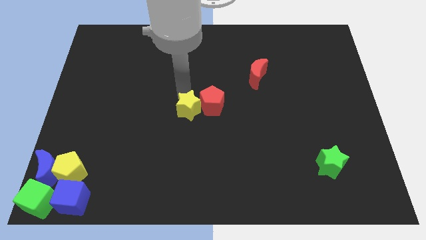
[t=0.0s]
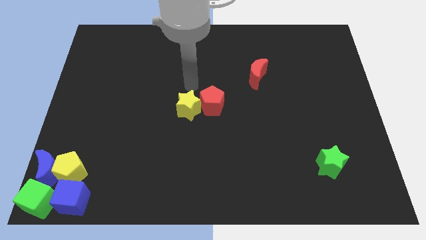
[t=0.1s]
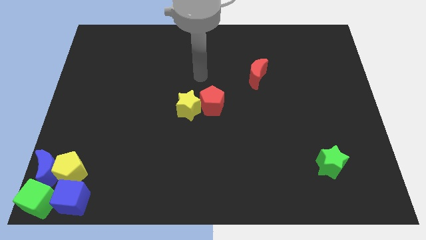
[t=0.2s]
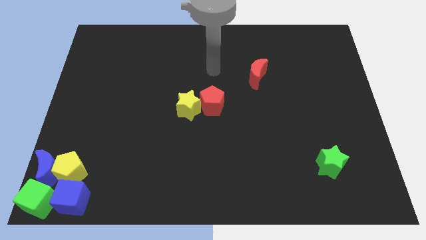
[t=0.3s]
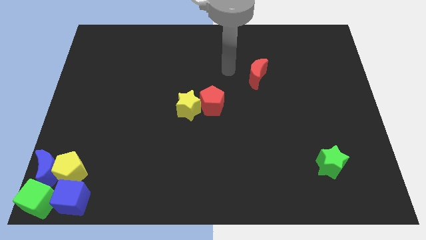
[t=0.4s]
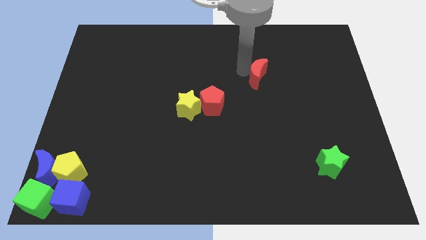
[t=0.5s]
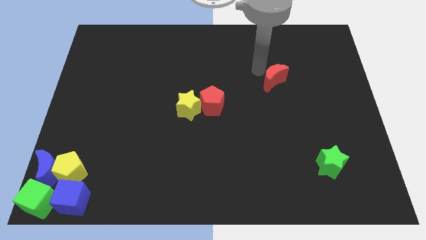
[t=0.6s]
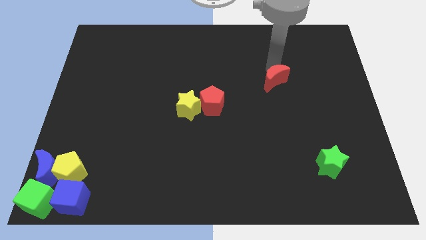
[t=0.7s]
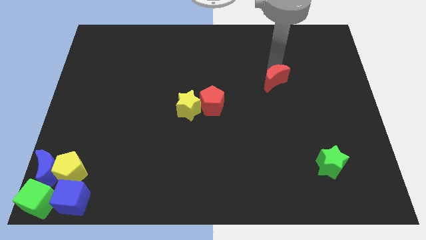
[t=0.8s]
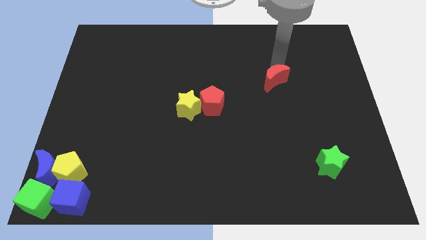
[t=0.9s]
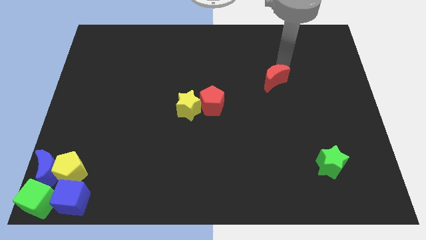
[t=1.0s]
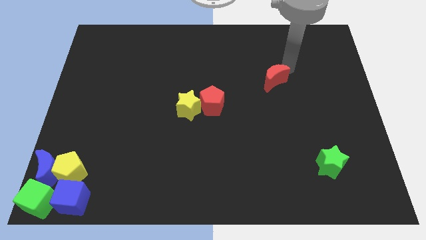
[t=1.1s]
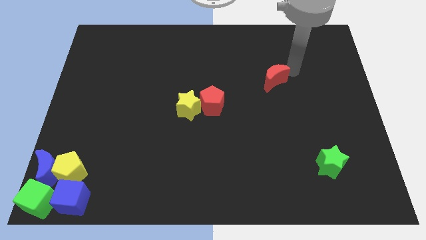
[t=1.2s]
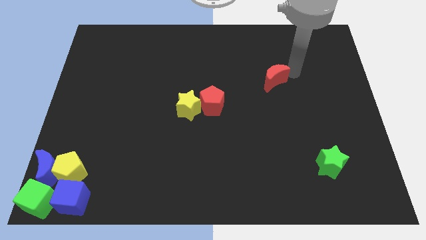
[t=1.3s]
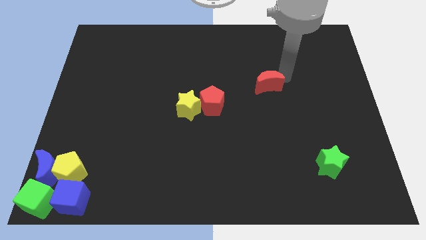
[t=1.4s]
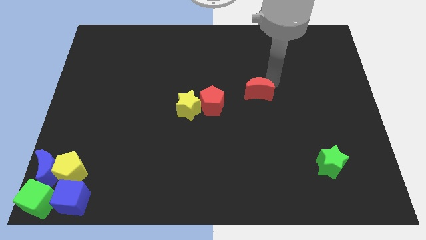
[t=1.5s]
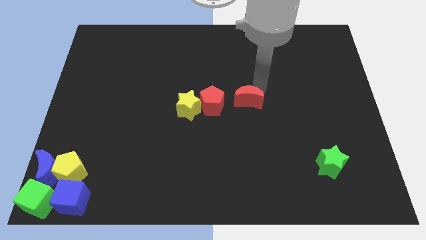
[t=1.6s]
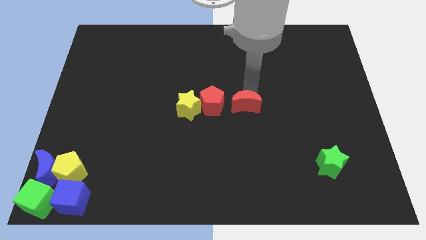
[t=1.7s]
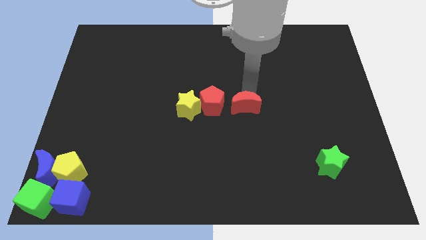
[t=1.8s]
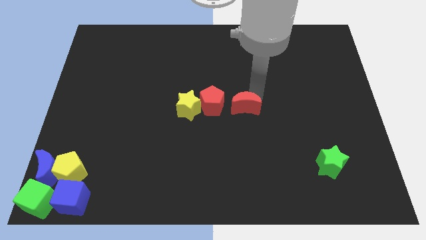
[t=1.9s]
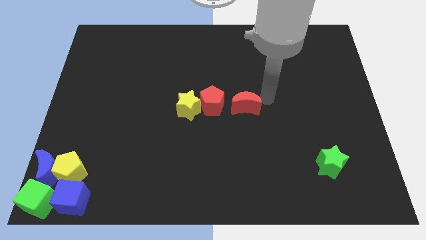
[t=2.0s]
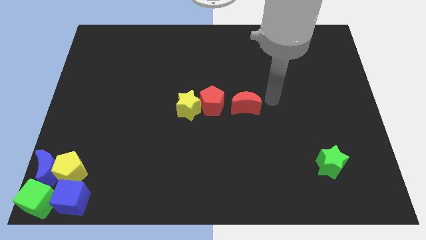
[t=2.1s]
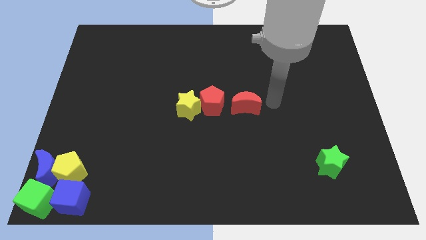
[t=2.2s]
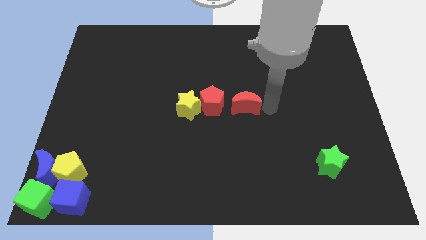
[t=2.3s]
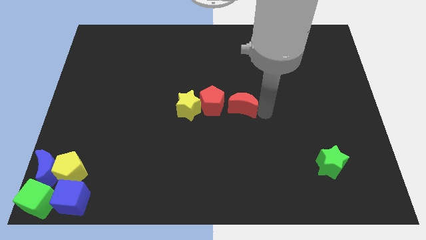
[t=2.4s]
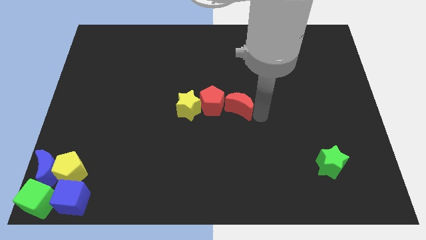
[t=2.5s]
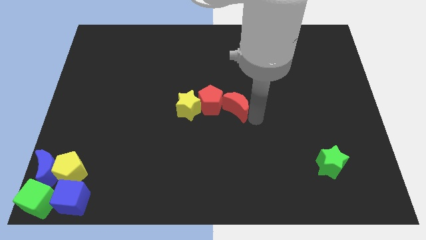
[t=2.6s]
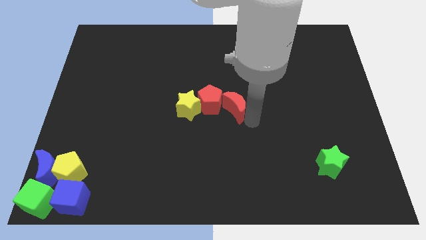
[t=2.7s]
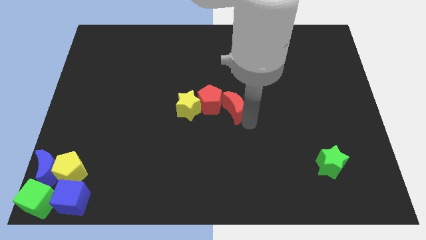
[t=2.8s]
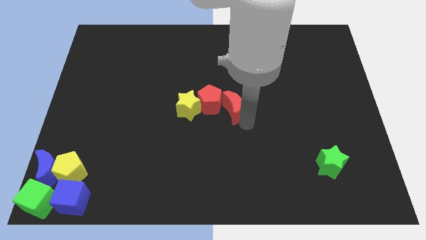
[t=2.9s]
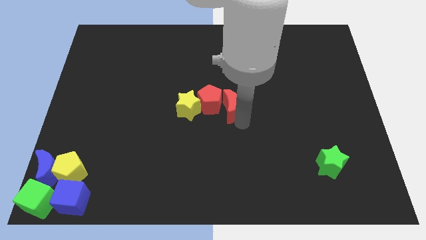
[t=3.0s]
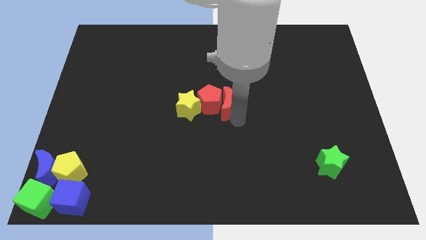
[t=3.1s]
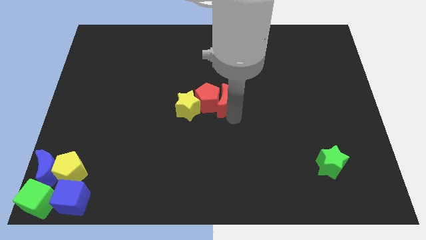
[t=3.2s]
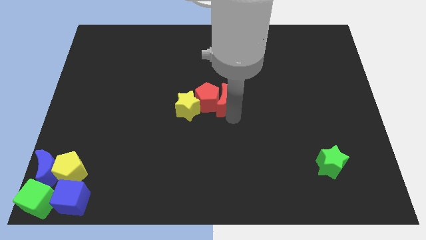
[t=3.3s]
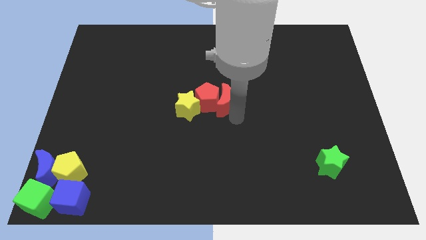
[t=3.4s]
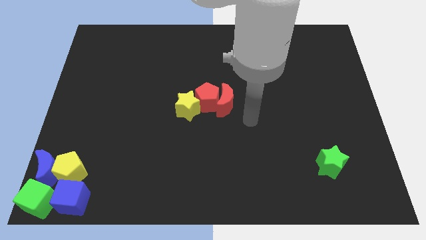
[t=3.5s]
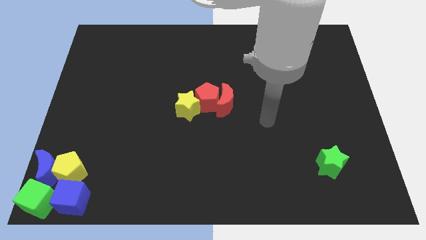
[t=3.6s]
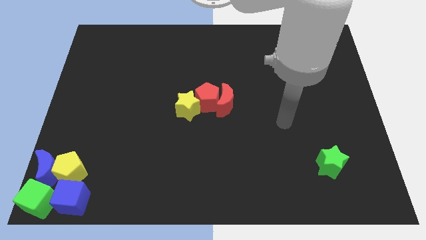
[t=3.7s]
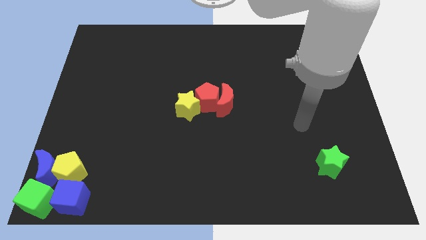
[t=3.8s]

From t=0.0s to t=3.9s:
push the red moon to the right of the red pentagon

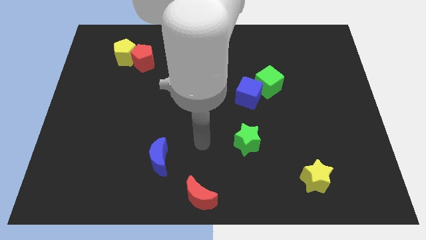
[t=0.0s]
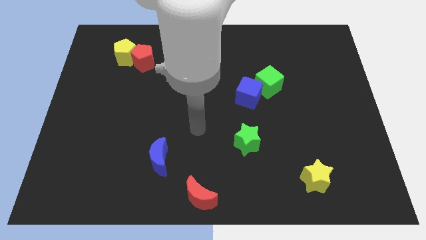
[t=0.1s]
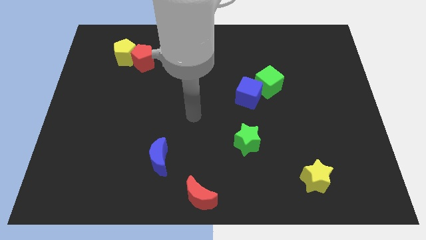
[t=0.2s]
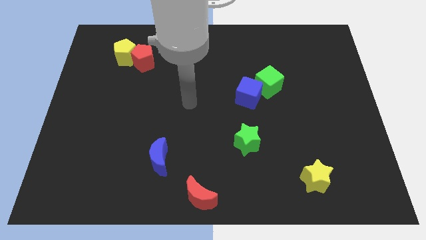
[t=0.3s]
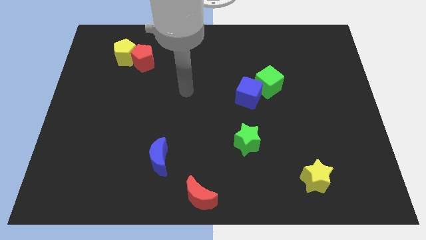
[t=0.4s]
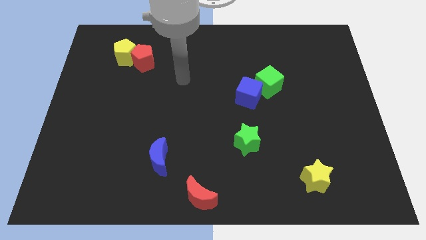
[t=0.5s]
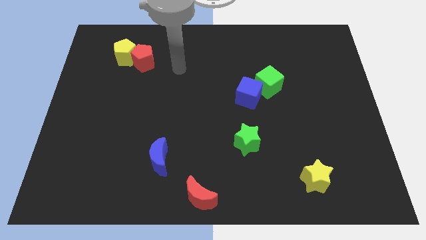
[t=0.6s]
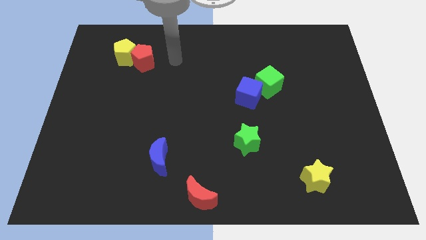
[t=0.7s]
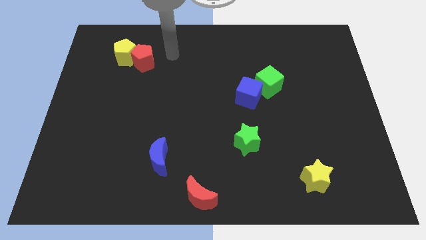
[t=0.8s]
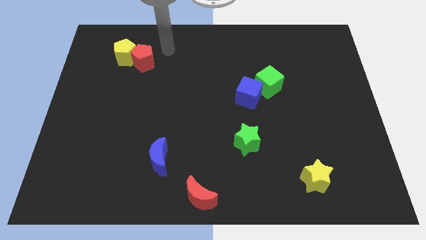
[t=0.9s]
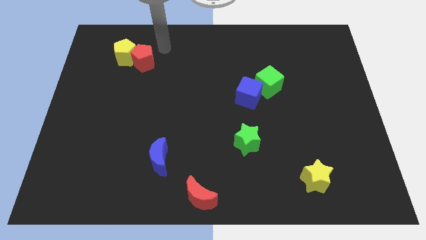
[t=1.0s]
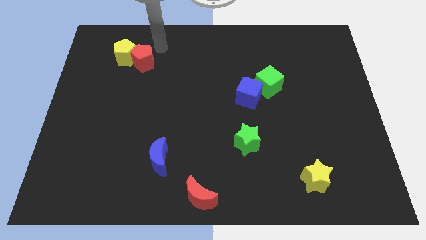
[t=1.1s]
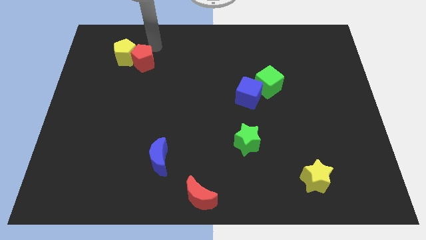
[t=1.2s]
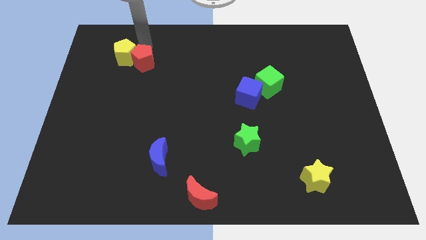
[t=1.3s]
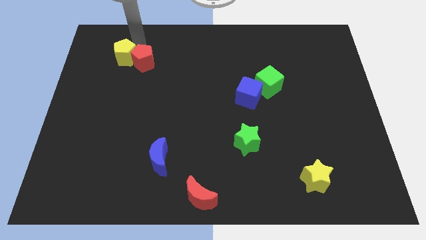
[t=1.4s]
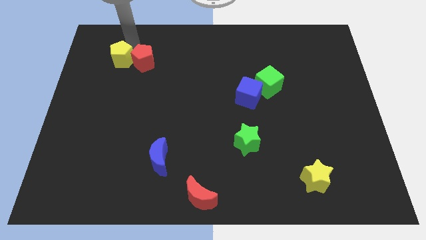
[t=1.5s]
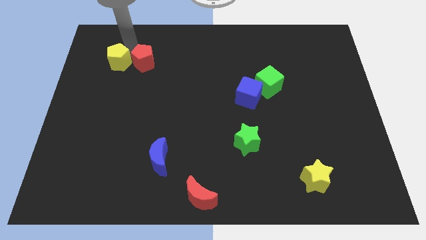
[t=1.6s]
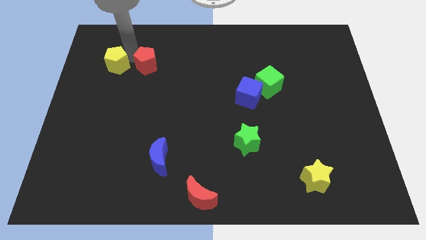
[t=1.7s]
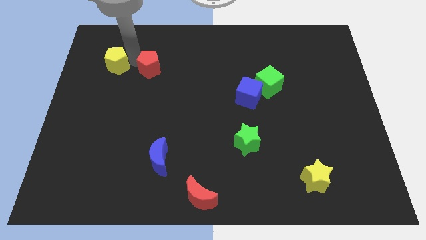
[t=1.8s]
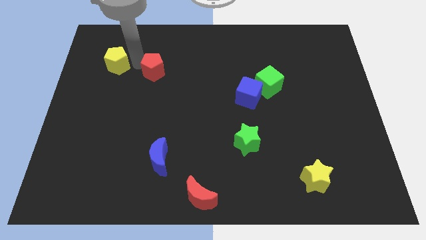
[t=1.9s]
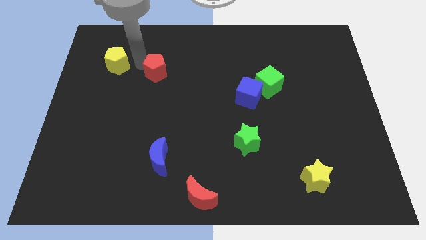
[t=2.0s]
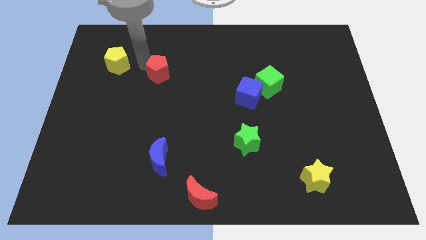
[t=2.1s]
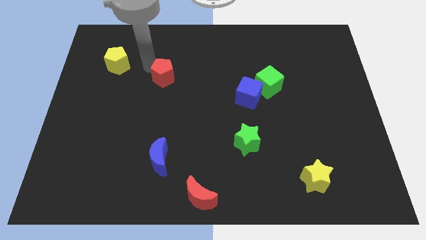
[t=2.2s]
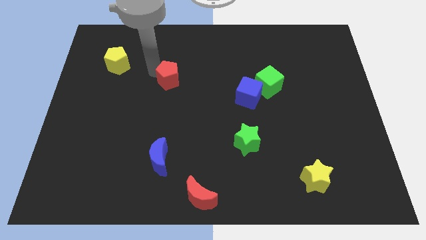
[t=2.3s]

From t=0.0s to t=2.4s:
separate the red pentagon from the yellow pentagon

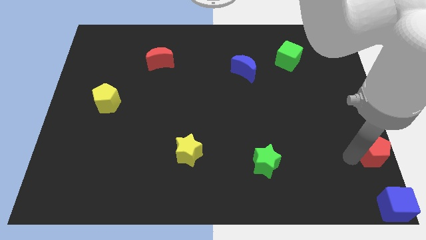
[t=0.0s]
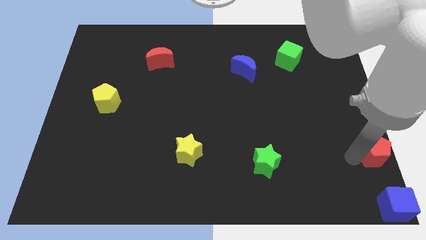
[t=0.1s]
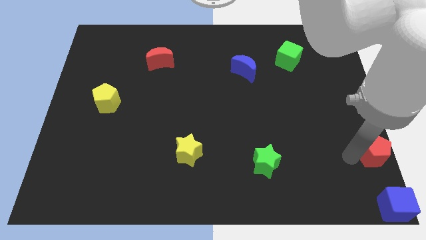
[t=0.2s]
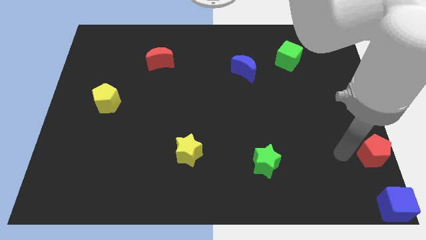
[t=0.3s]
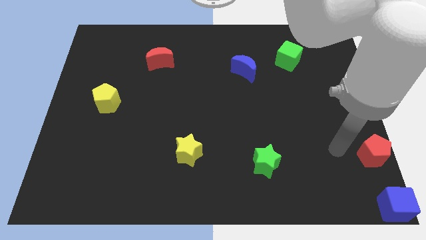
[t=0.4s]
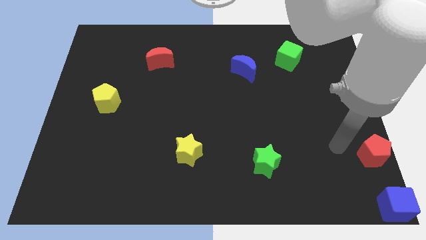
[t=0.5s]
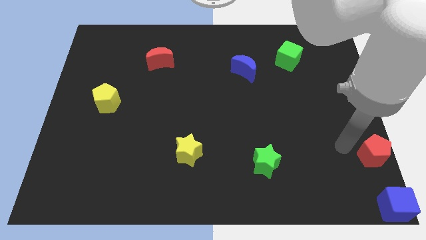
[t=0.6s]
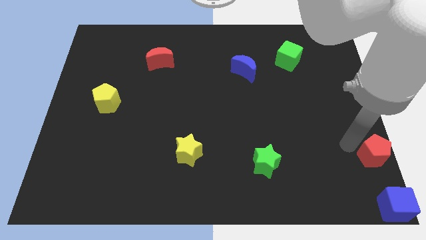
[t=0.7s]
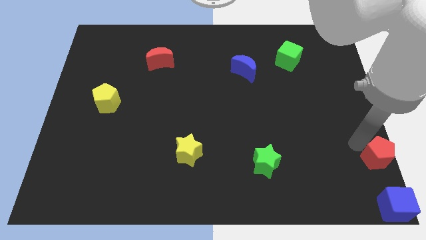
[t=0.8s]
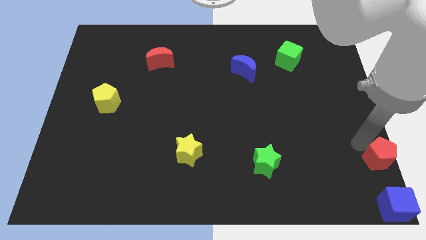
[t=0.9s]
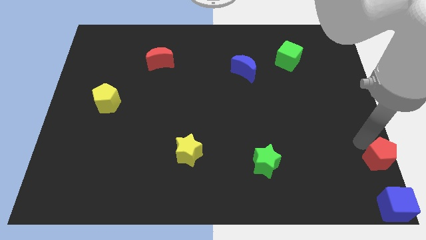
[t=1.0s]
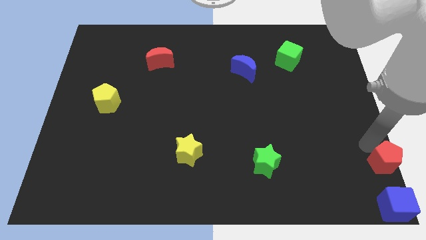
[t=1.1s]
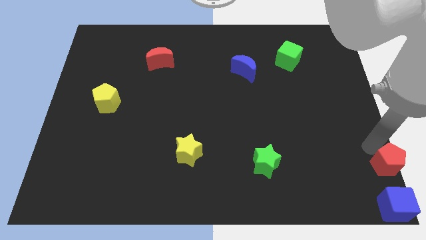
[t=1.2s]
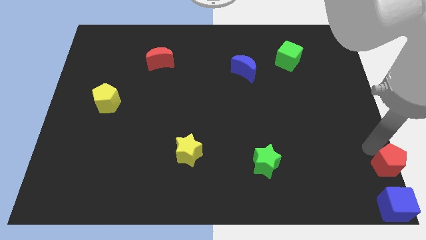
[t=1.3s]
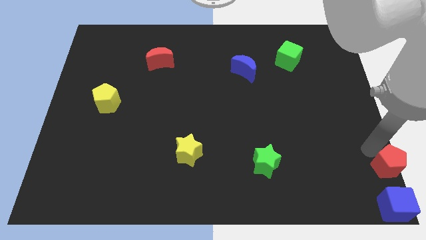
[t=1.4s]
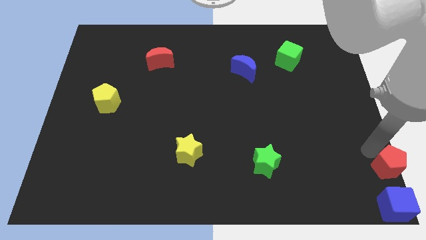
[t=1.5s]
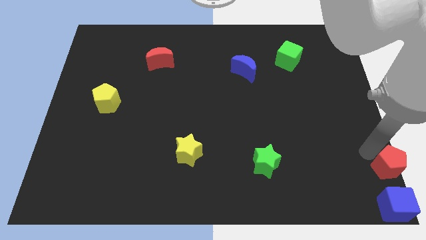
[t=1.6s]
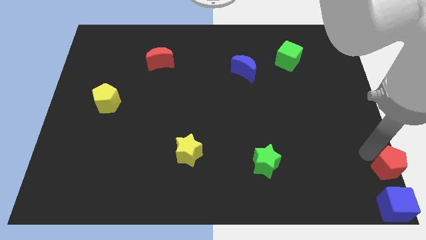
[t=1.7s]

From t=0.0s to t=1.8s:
move the red pentagon towards blue cube

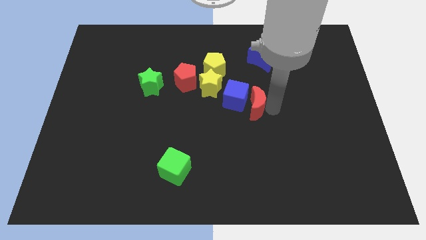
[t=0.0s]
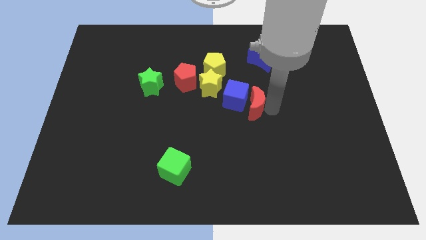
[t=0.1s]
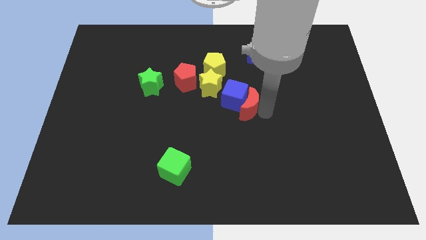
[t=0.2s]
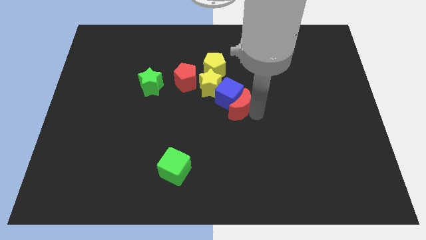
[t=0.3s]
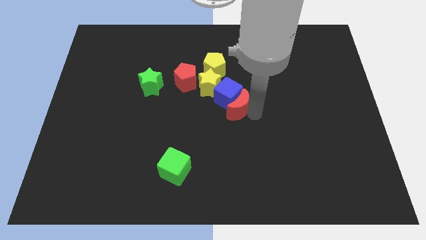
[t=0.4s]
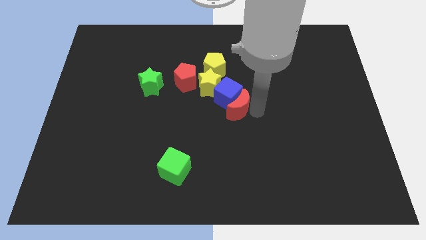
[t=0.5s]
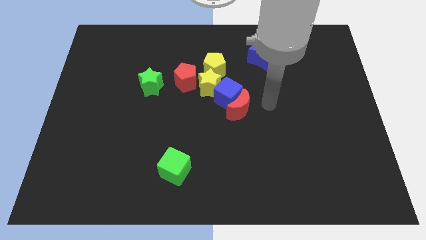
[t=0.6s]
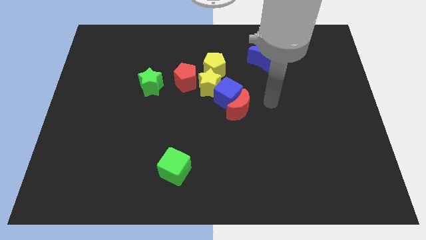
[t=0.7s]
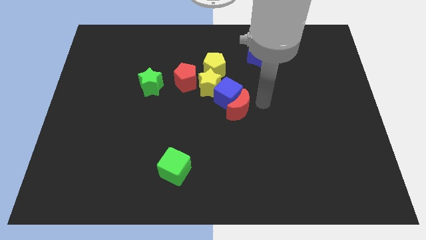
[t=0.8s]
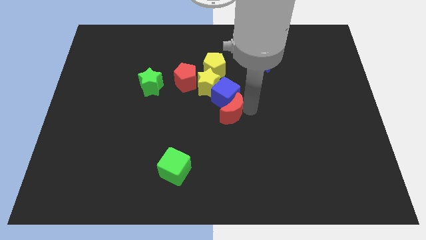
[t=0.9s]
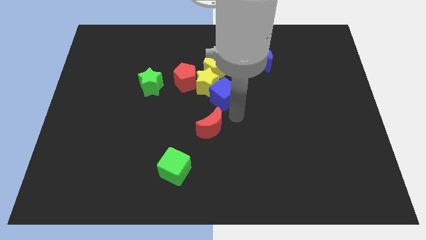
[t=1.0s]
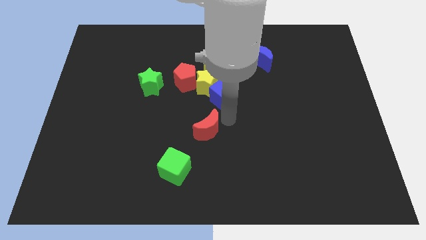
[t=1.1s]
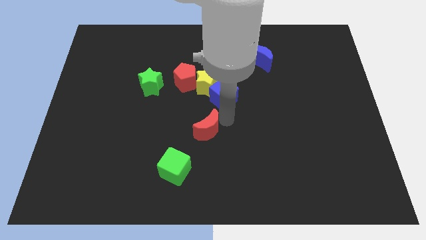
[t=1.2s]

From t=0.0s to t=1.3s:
push the red crescent to the bottom of the yellow star
